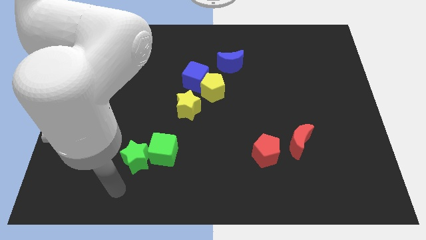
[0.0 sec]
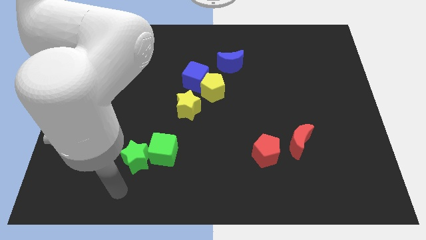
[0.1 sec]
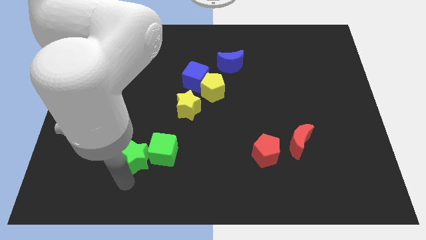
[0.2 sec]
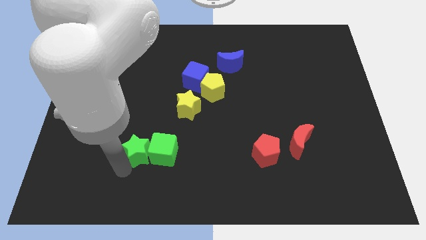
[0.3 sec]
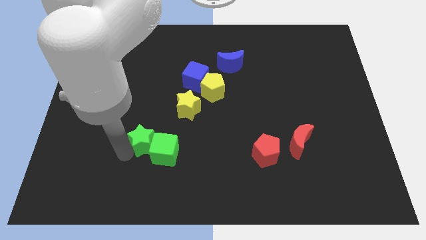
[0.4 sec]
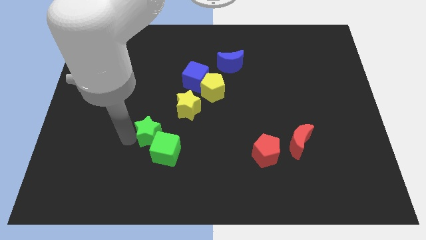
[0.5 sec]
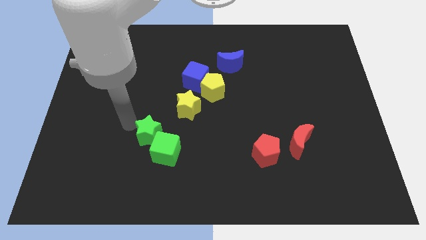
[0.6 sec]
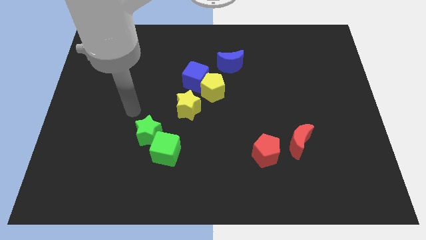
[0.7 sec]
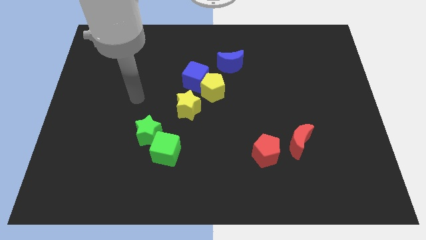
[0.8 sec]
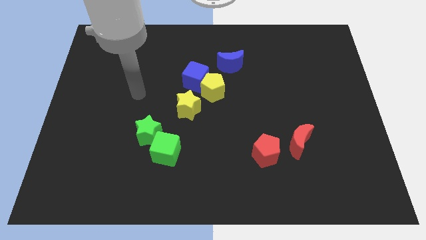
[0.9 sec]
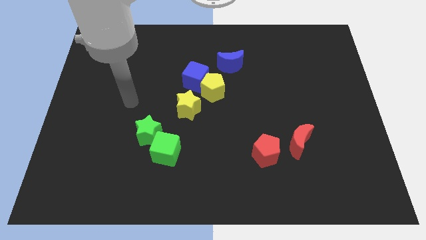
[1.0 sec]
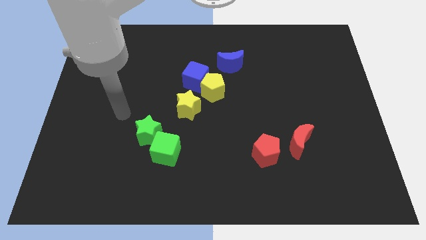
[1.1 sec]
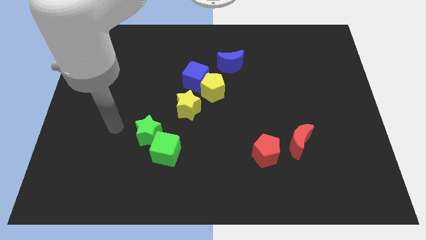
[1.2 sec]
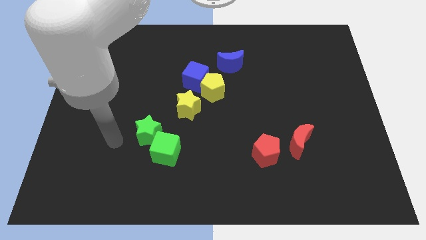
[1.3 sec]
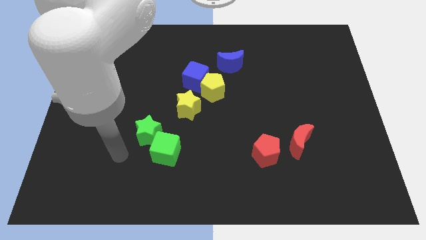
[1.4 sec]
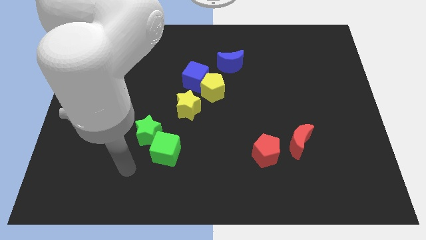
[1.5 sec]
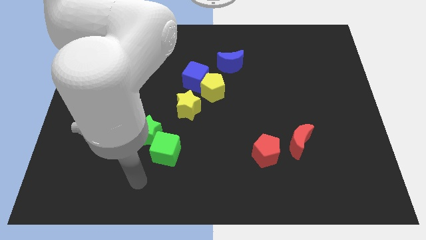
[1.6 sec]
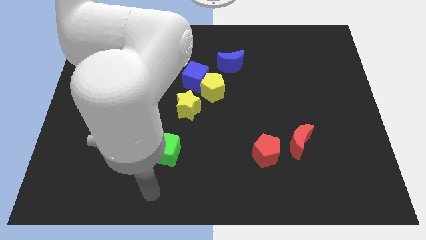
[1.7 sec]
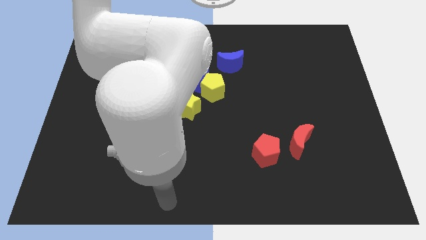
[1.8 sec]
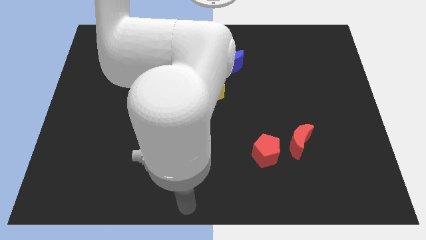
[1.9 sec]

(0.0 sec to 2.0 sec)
push the green star upwards

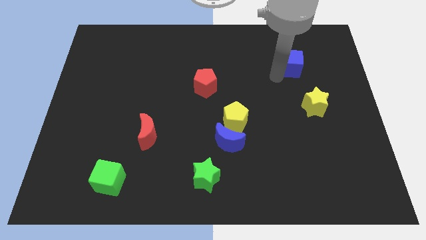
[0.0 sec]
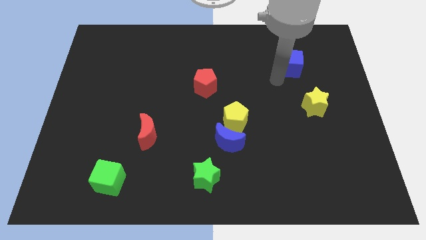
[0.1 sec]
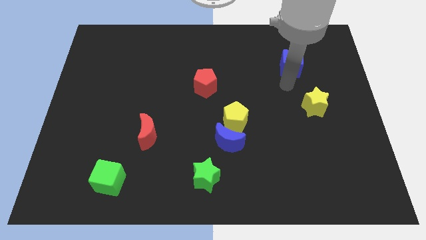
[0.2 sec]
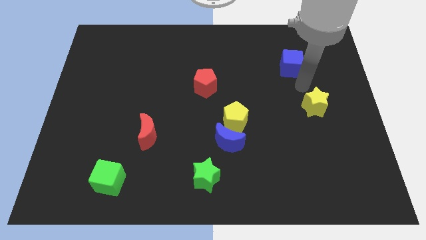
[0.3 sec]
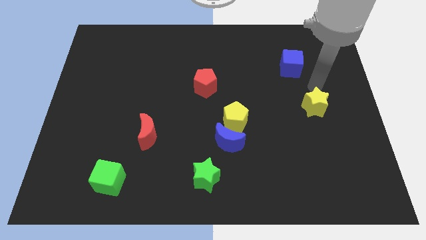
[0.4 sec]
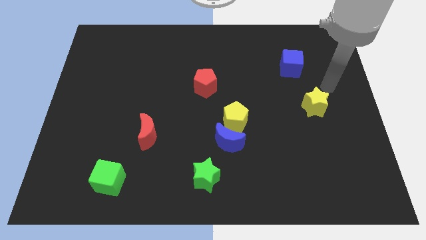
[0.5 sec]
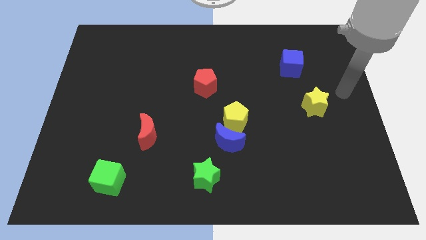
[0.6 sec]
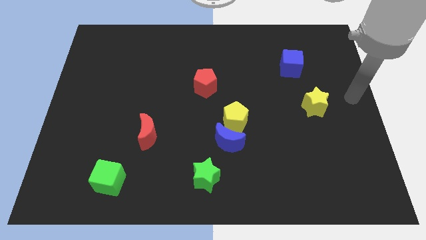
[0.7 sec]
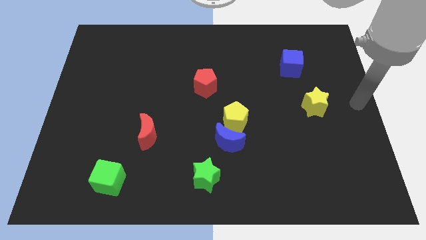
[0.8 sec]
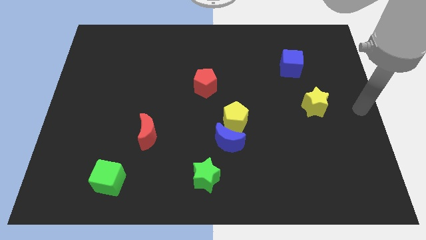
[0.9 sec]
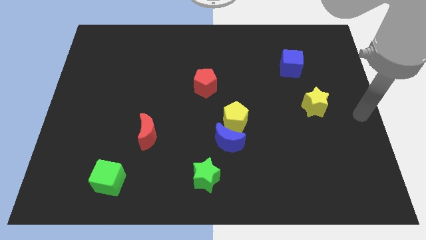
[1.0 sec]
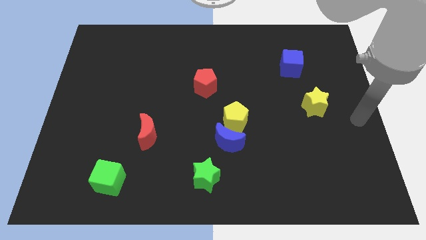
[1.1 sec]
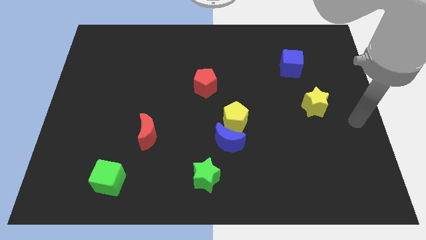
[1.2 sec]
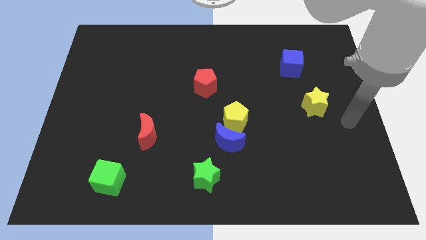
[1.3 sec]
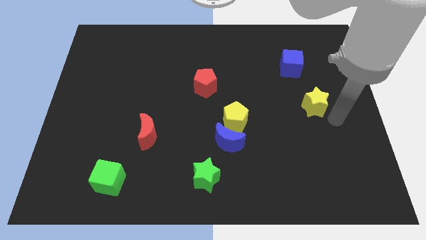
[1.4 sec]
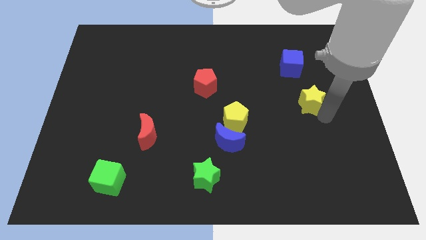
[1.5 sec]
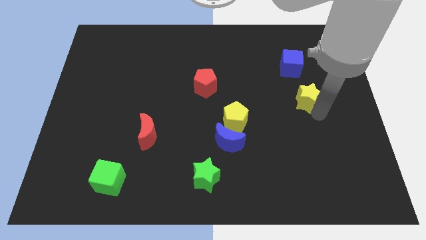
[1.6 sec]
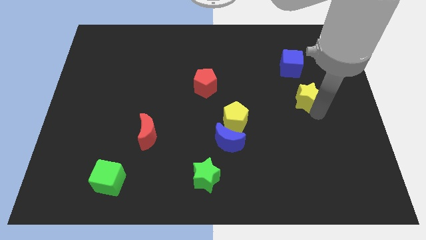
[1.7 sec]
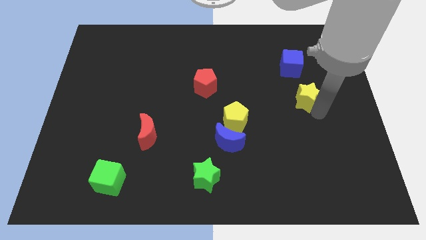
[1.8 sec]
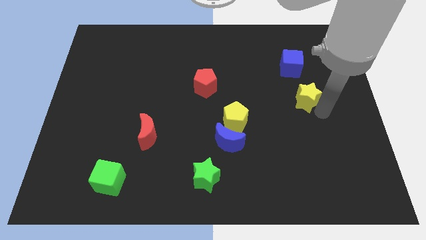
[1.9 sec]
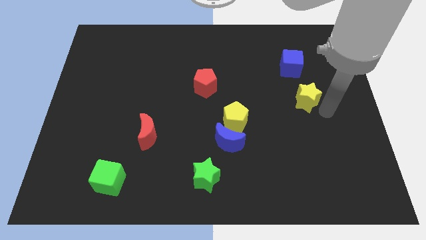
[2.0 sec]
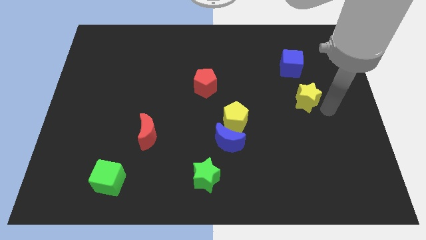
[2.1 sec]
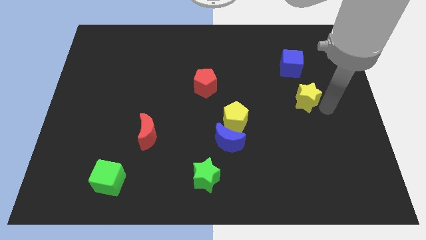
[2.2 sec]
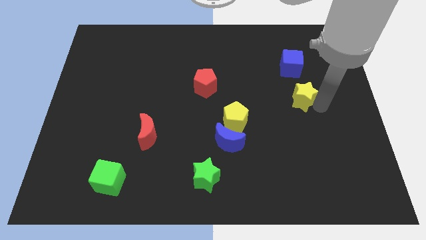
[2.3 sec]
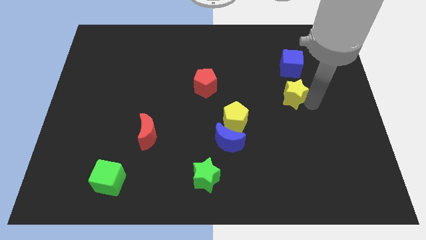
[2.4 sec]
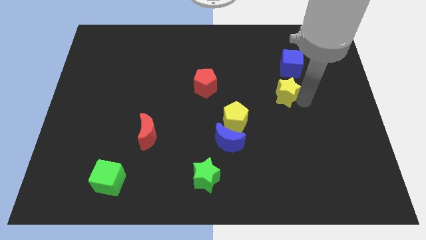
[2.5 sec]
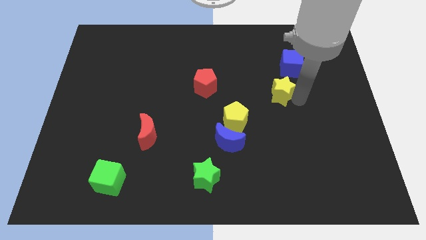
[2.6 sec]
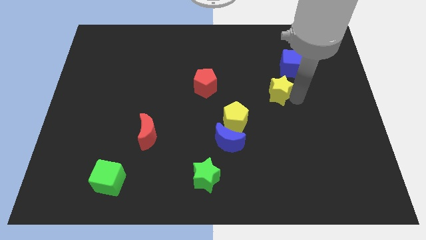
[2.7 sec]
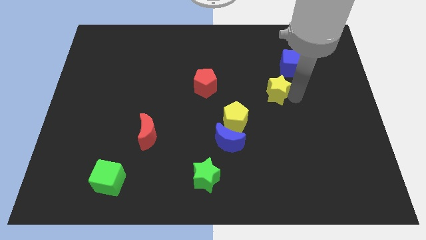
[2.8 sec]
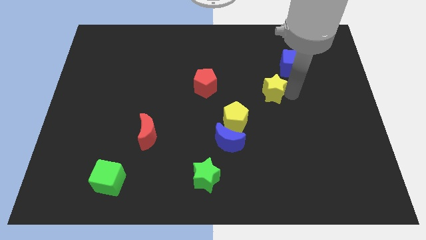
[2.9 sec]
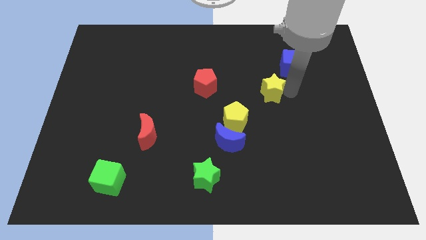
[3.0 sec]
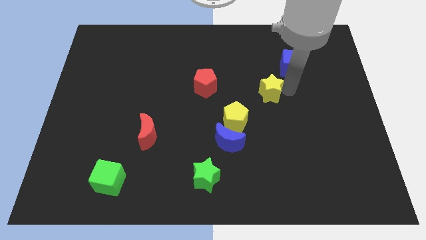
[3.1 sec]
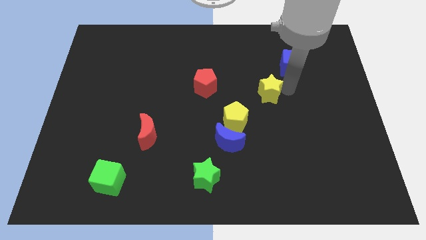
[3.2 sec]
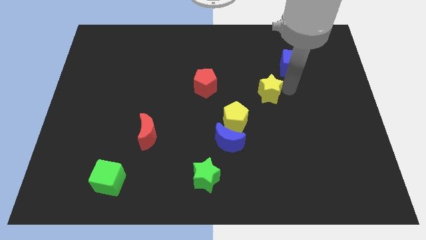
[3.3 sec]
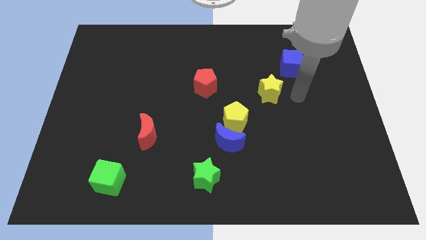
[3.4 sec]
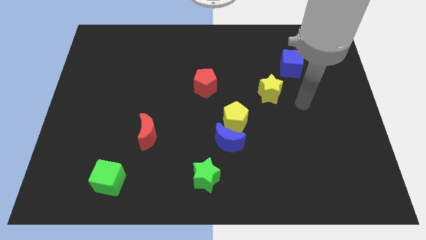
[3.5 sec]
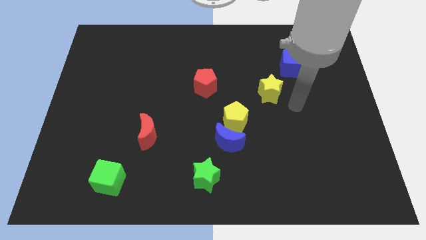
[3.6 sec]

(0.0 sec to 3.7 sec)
move your arm away from the blue cube

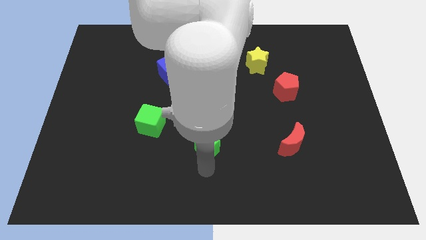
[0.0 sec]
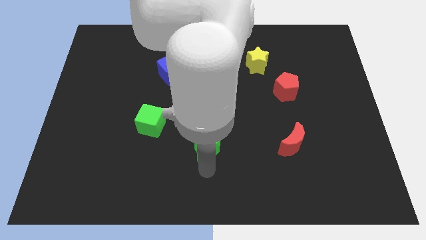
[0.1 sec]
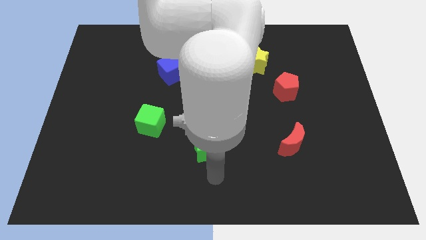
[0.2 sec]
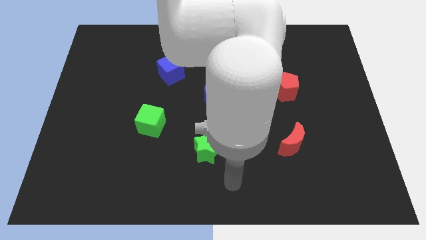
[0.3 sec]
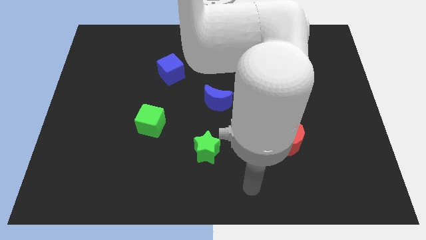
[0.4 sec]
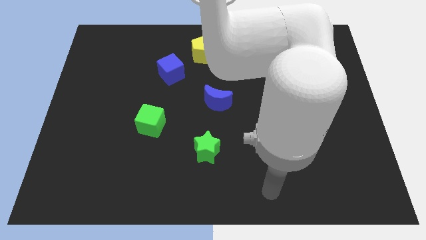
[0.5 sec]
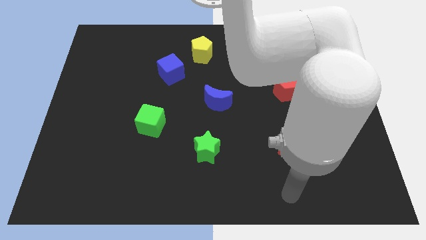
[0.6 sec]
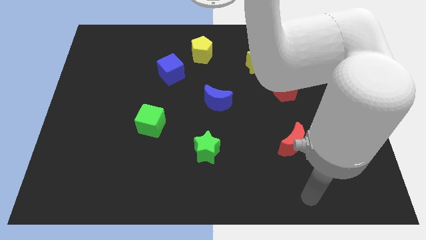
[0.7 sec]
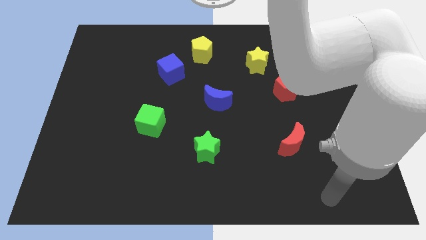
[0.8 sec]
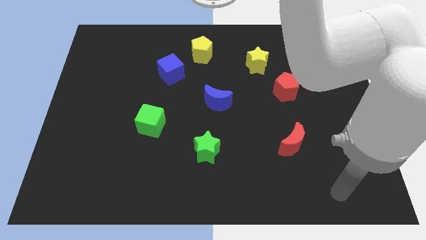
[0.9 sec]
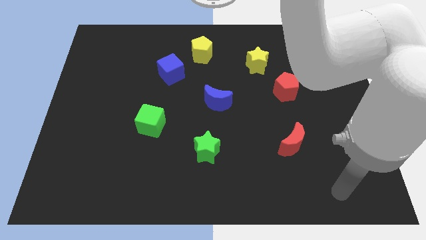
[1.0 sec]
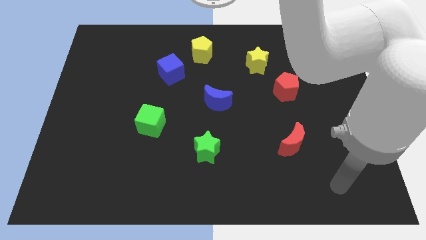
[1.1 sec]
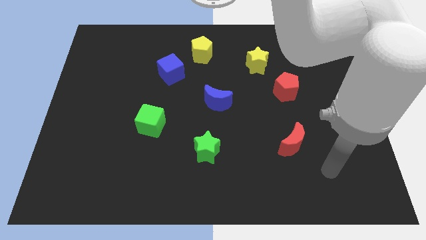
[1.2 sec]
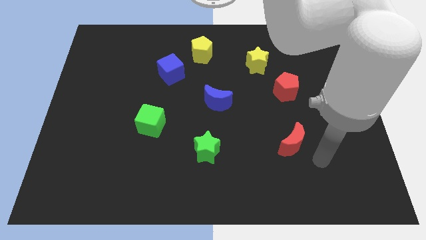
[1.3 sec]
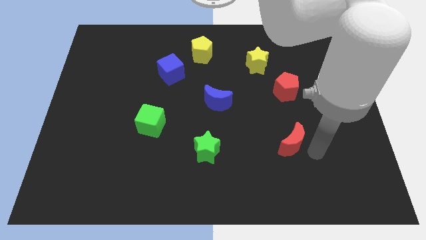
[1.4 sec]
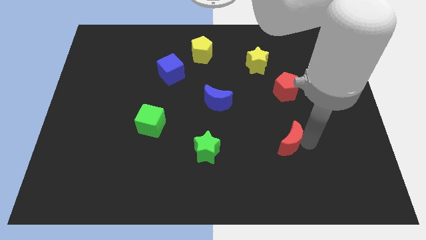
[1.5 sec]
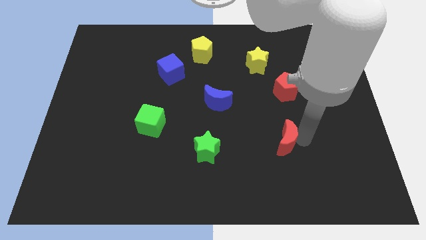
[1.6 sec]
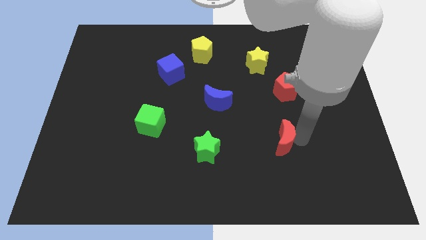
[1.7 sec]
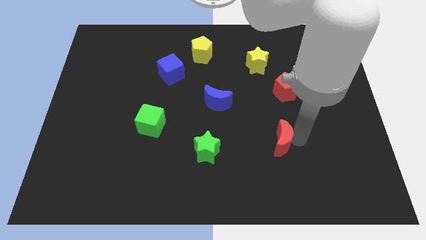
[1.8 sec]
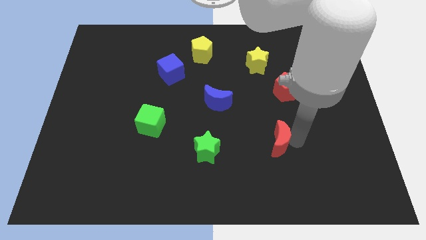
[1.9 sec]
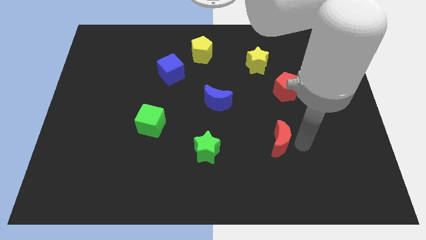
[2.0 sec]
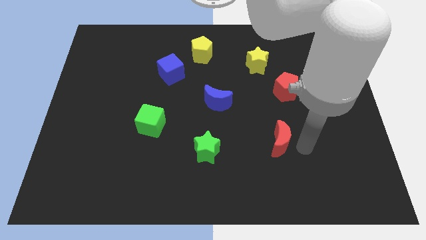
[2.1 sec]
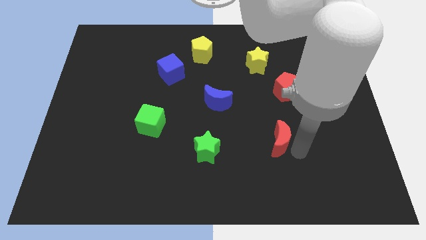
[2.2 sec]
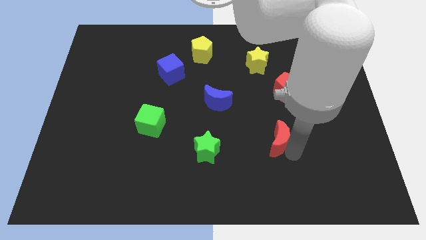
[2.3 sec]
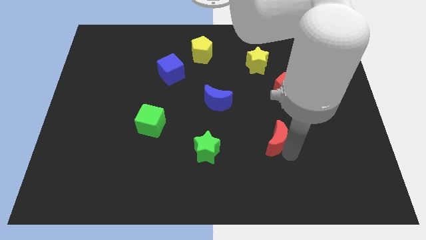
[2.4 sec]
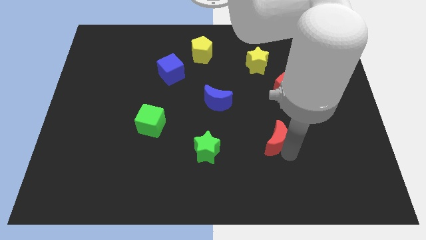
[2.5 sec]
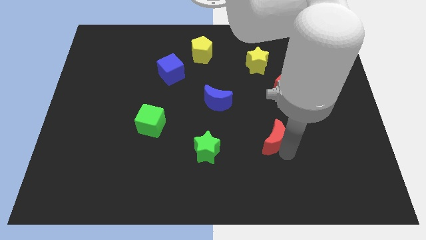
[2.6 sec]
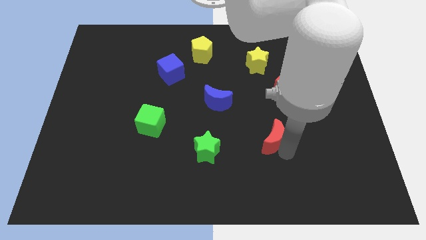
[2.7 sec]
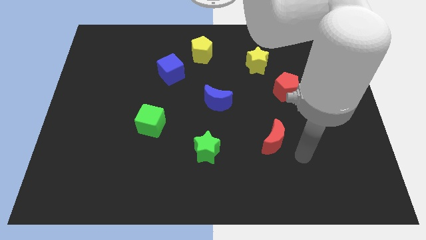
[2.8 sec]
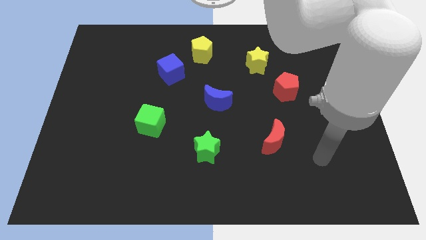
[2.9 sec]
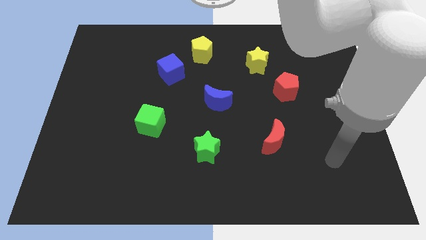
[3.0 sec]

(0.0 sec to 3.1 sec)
slightly move red crescent towards the green star

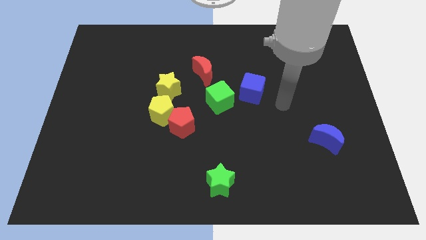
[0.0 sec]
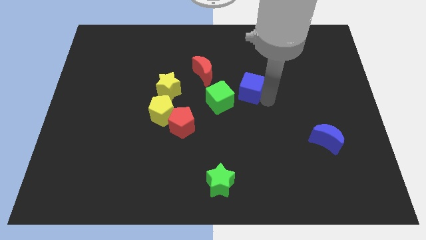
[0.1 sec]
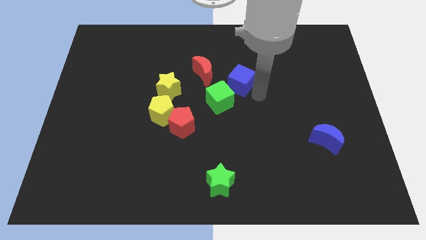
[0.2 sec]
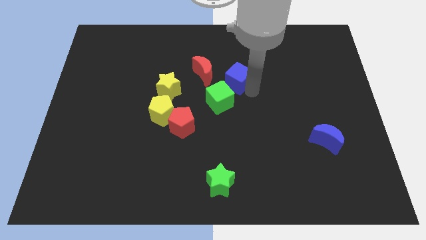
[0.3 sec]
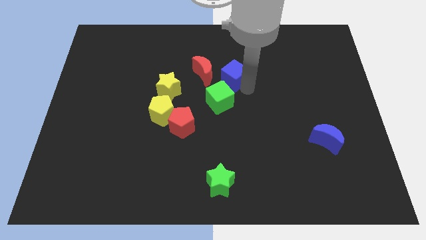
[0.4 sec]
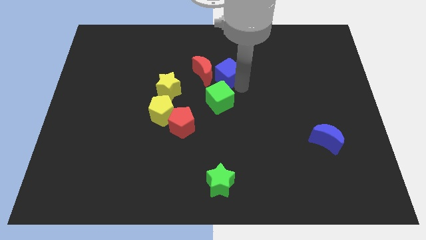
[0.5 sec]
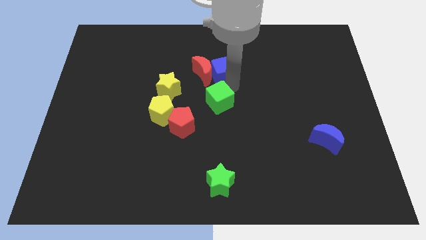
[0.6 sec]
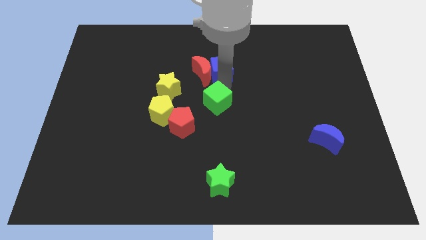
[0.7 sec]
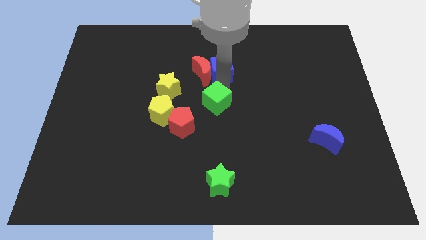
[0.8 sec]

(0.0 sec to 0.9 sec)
move the blue cube into the red crescent
